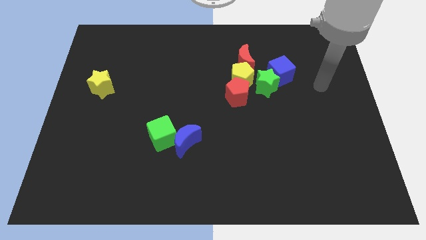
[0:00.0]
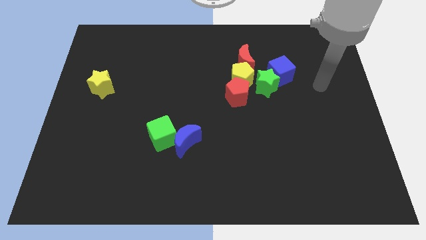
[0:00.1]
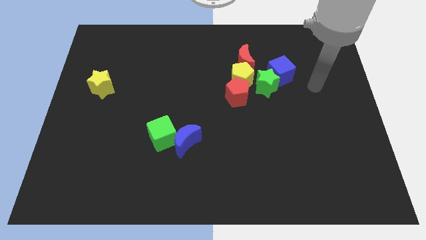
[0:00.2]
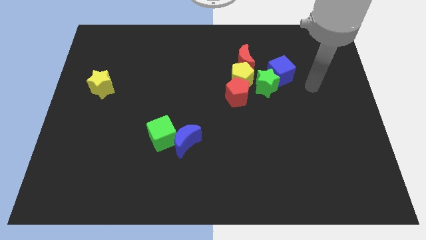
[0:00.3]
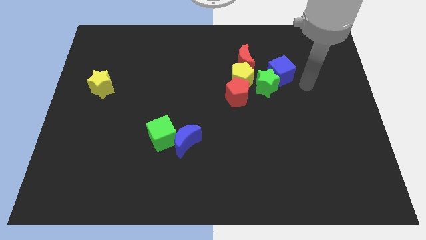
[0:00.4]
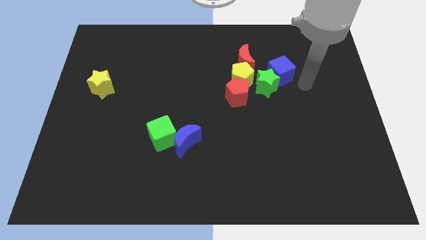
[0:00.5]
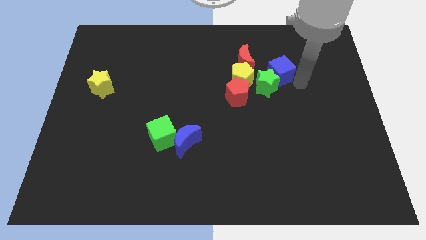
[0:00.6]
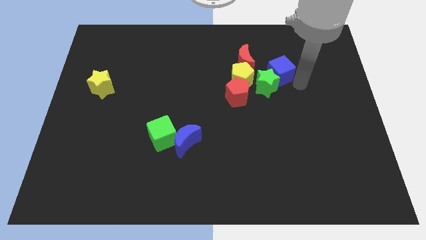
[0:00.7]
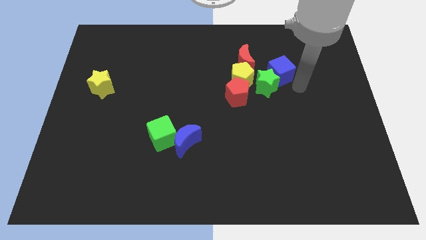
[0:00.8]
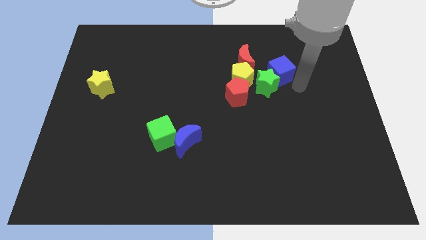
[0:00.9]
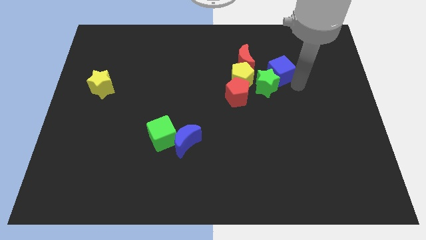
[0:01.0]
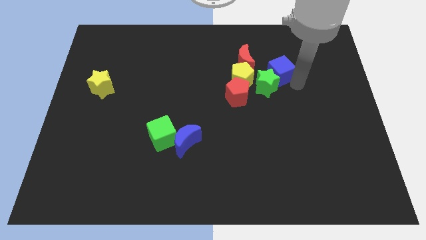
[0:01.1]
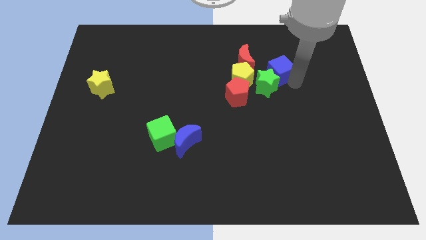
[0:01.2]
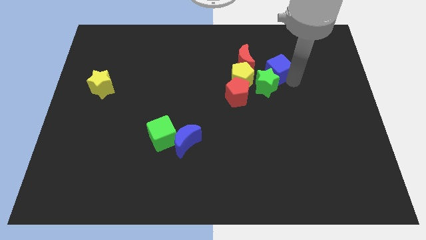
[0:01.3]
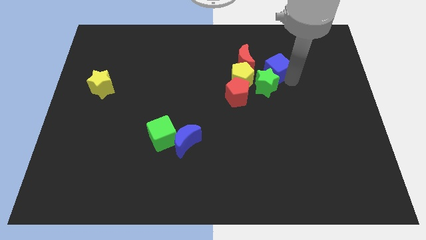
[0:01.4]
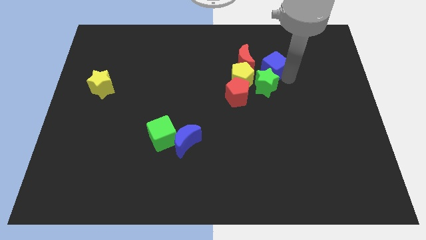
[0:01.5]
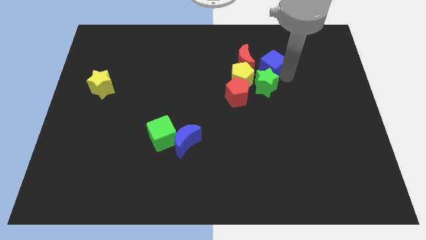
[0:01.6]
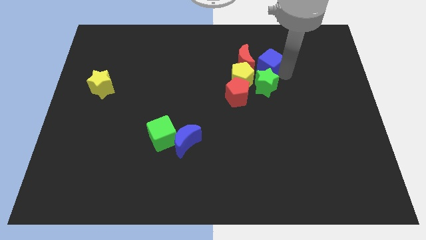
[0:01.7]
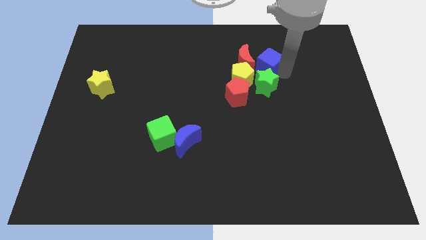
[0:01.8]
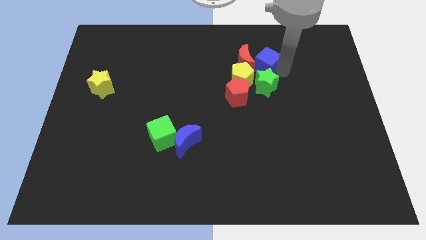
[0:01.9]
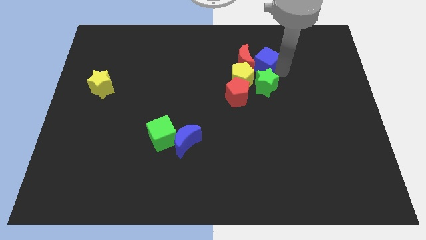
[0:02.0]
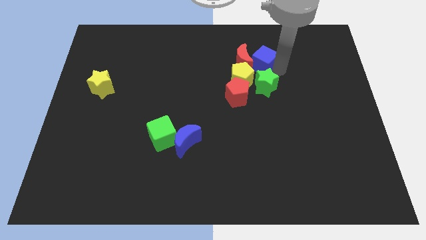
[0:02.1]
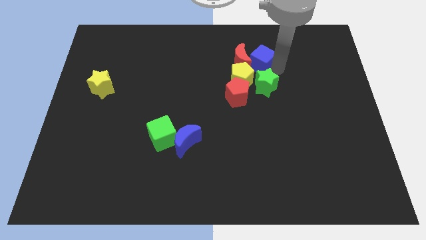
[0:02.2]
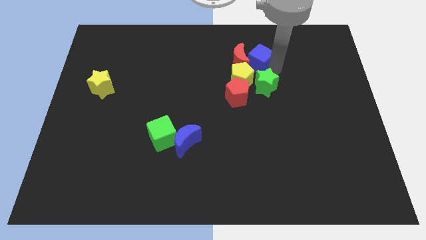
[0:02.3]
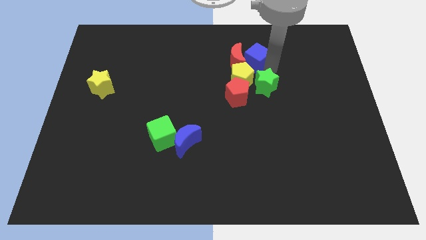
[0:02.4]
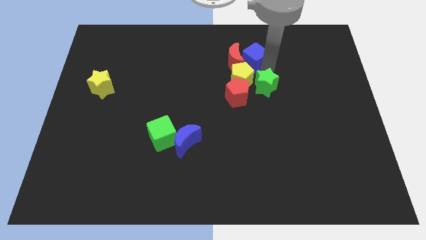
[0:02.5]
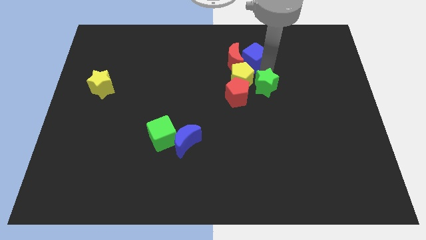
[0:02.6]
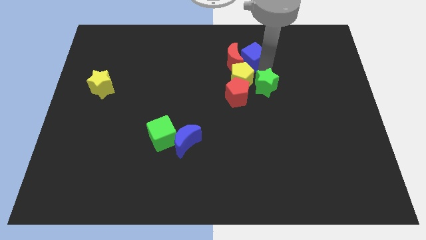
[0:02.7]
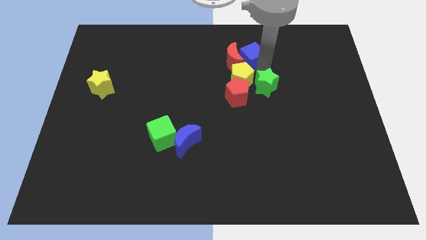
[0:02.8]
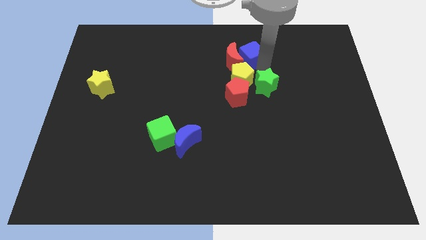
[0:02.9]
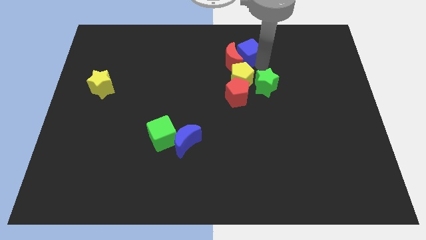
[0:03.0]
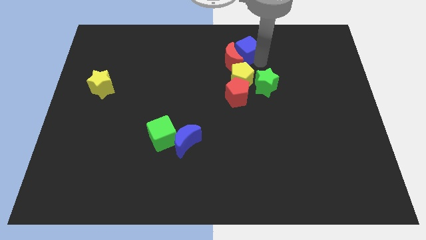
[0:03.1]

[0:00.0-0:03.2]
push the blue cube into the red moon

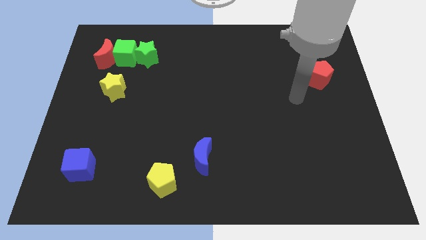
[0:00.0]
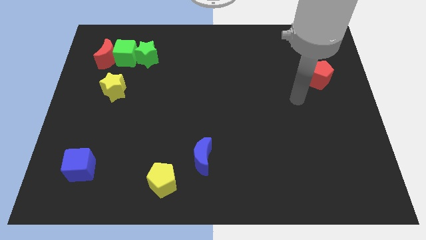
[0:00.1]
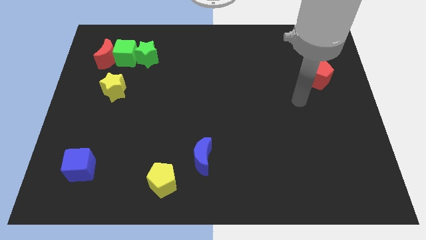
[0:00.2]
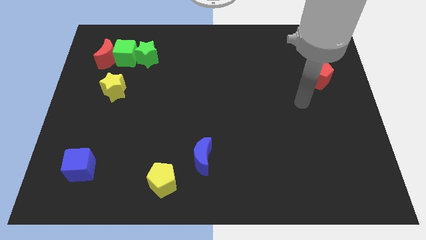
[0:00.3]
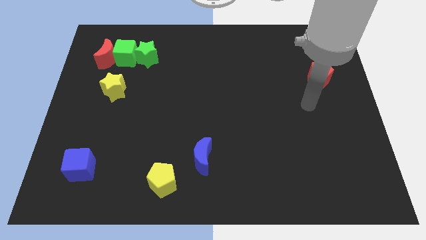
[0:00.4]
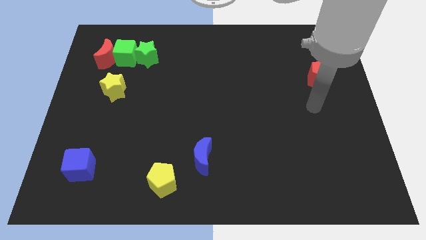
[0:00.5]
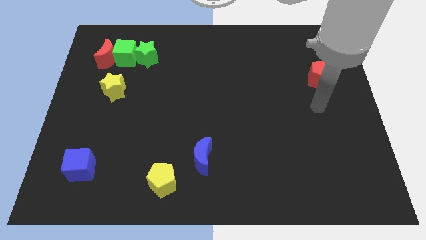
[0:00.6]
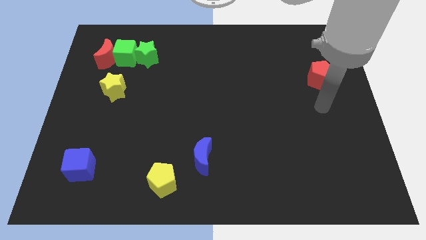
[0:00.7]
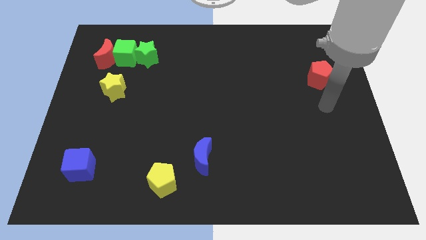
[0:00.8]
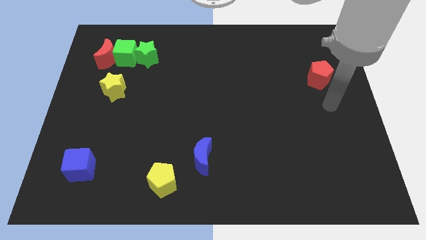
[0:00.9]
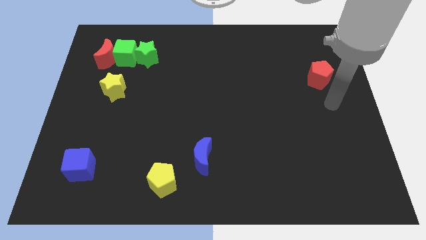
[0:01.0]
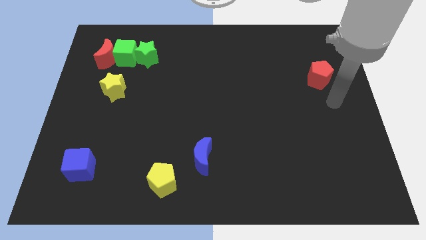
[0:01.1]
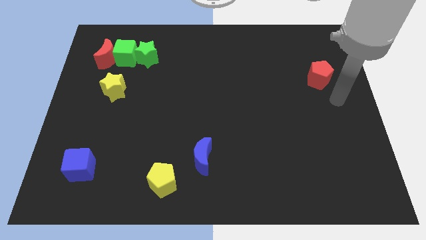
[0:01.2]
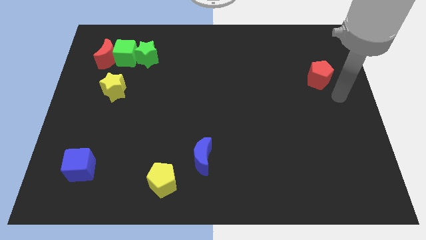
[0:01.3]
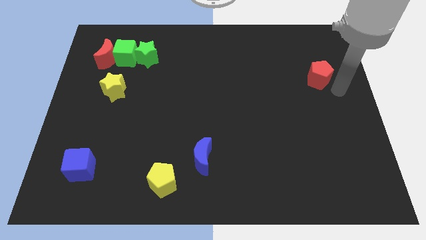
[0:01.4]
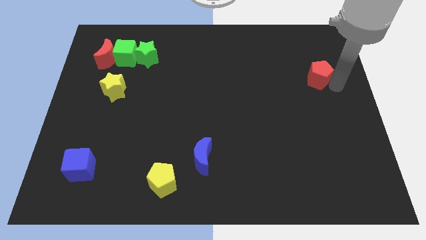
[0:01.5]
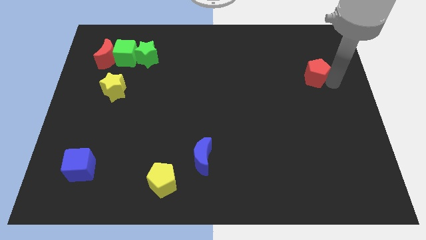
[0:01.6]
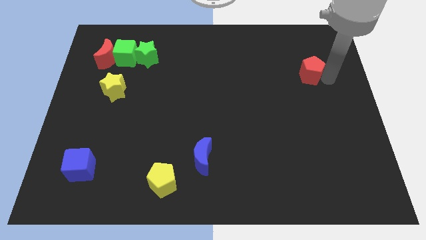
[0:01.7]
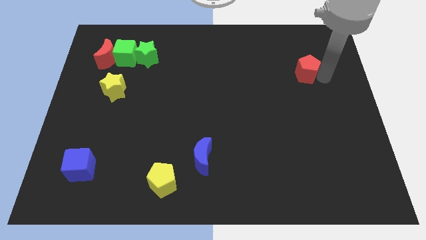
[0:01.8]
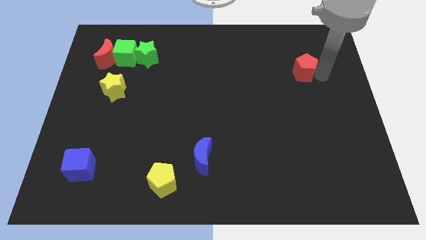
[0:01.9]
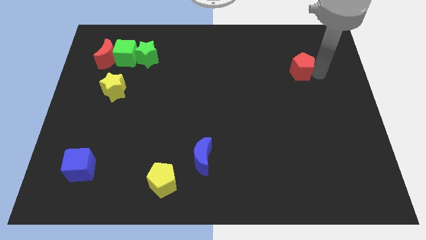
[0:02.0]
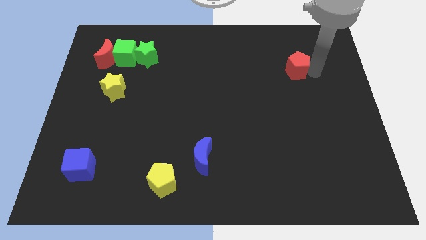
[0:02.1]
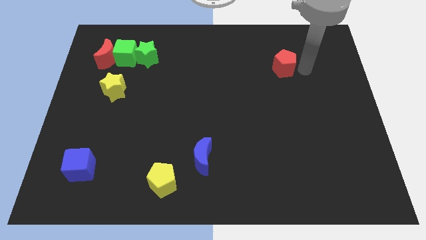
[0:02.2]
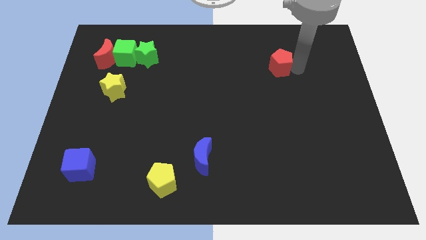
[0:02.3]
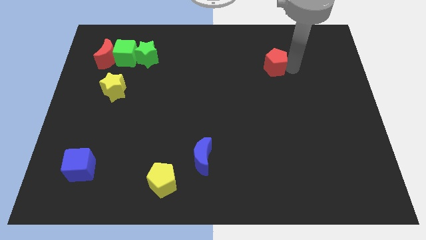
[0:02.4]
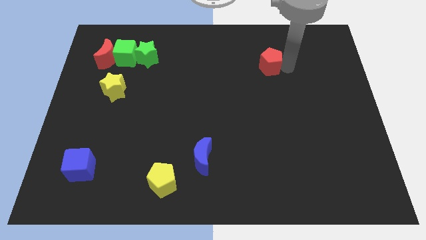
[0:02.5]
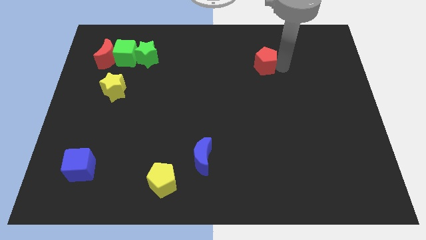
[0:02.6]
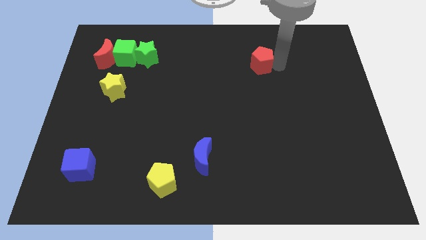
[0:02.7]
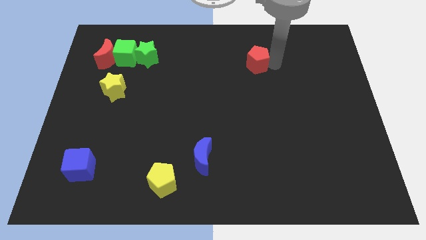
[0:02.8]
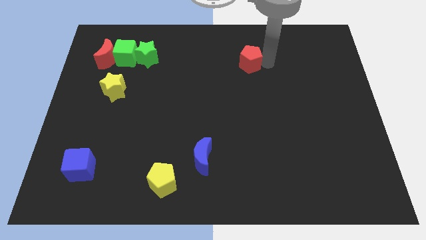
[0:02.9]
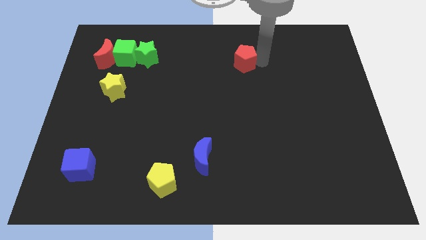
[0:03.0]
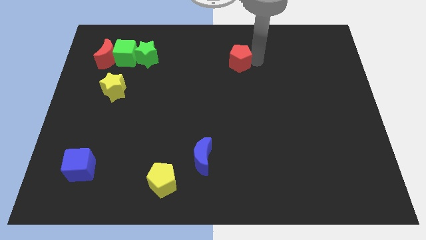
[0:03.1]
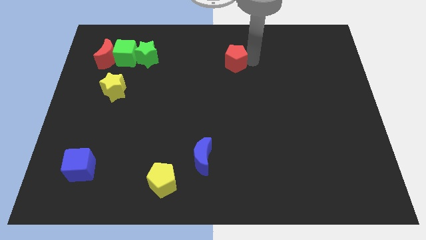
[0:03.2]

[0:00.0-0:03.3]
place the red pentagon diagonal to the blue moon

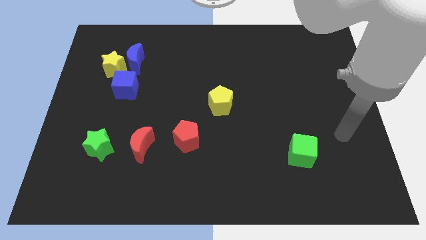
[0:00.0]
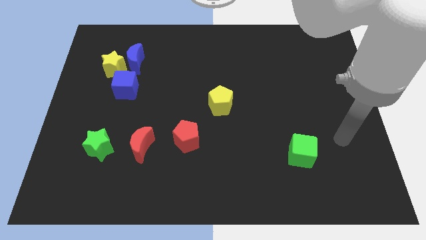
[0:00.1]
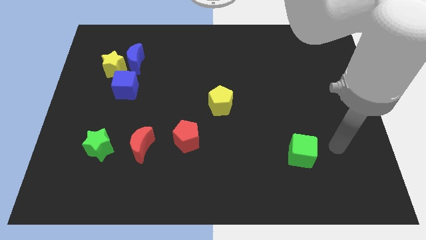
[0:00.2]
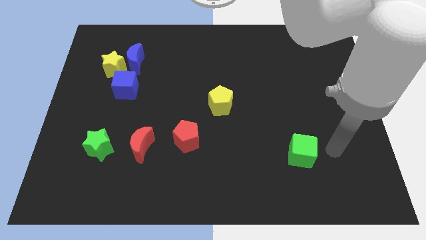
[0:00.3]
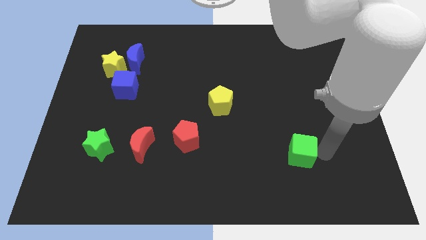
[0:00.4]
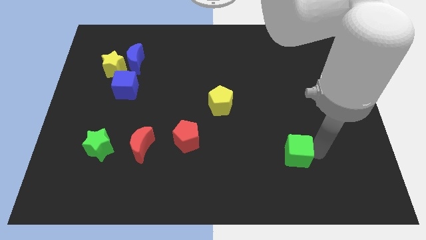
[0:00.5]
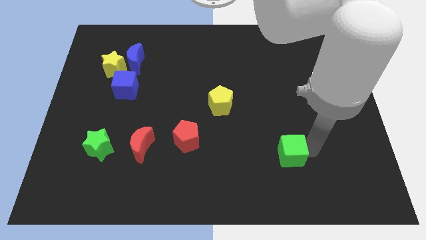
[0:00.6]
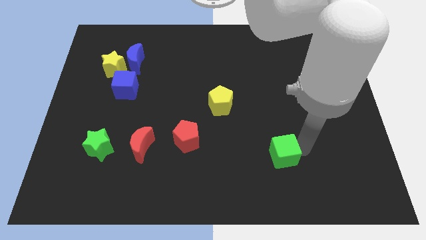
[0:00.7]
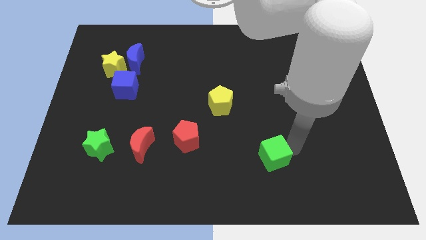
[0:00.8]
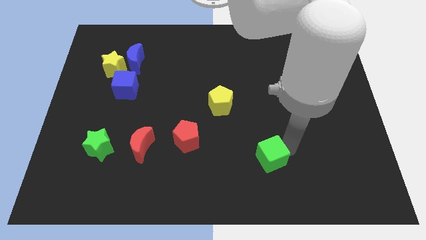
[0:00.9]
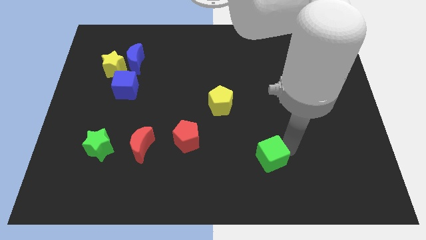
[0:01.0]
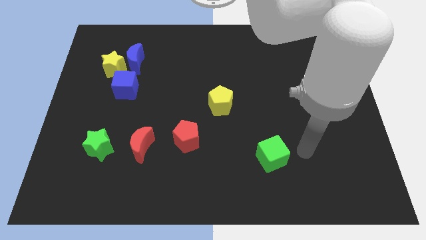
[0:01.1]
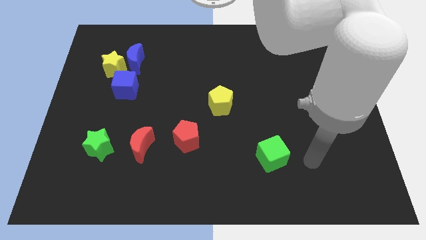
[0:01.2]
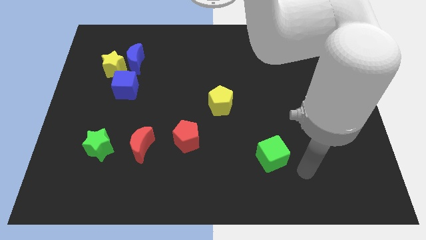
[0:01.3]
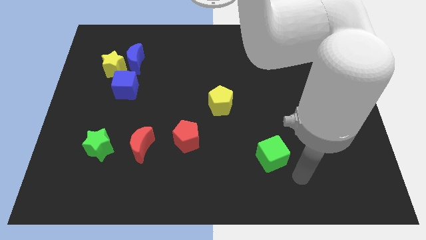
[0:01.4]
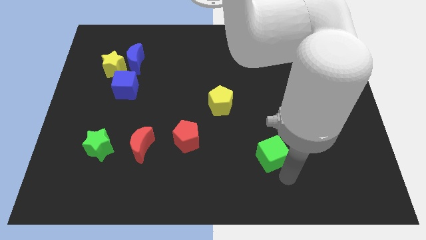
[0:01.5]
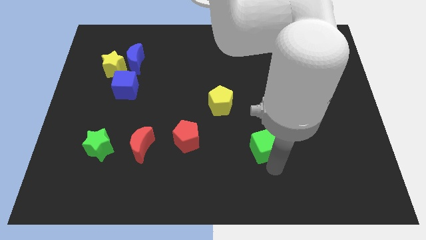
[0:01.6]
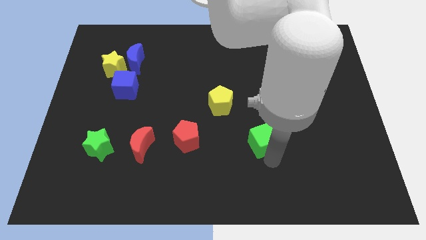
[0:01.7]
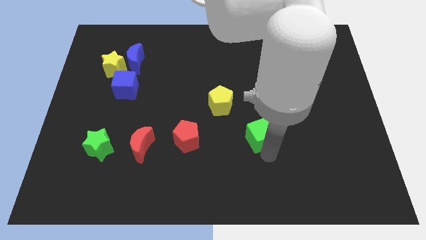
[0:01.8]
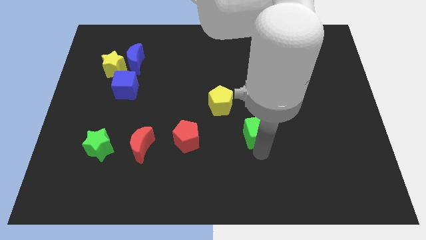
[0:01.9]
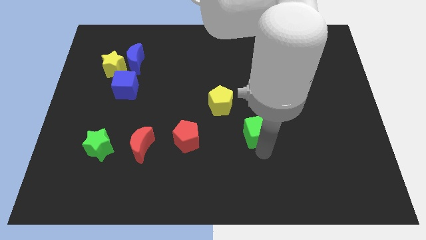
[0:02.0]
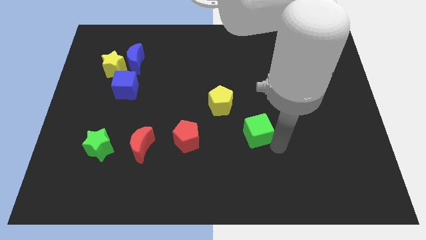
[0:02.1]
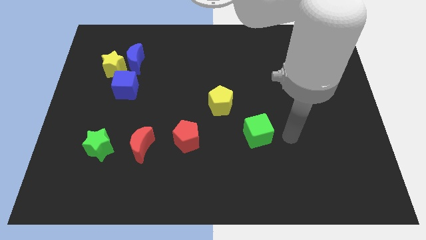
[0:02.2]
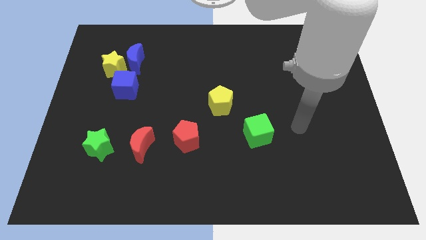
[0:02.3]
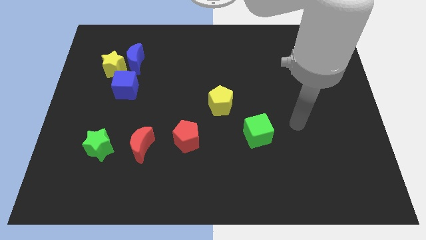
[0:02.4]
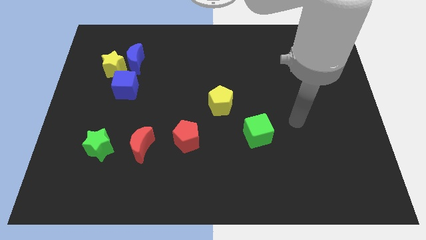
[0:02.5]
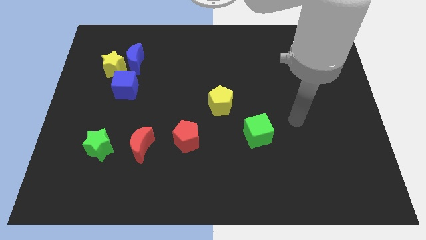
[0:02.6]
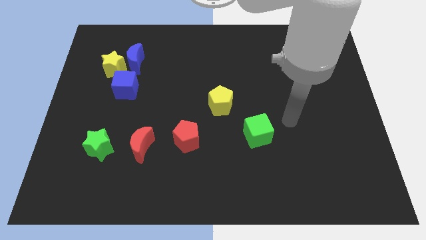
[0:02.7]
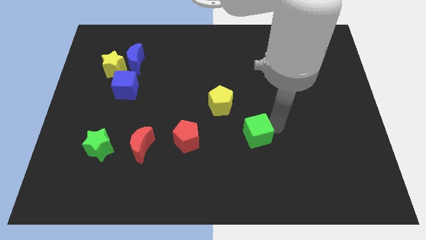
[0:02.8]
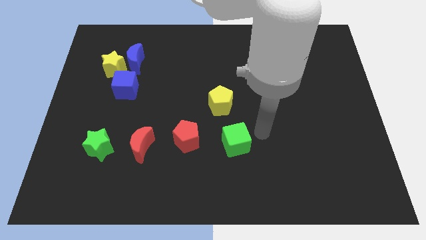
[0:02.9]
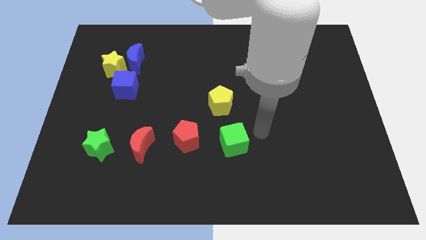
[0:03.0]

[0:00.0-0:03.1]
place the green cube to the right of the red pentagon
